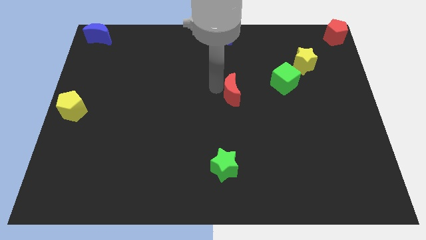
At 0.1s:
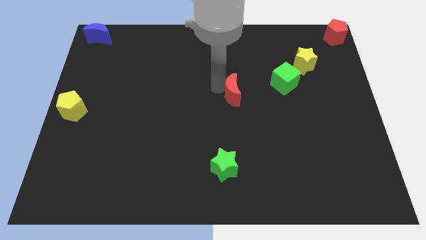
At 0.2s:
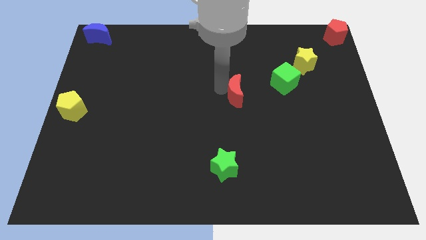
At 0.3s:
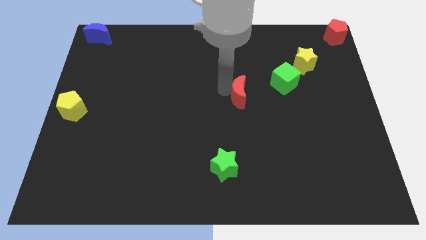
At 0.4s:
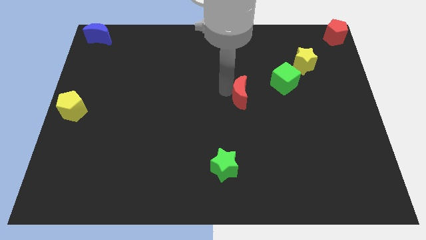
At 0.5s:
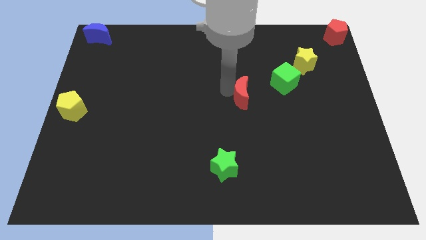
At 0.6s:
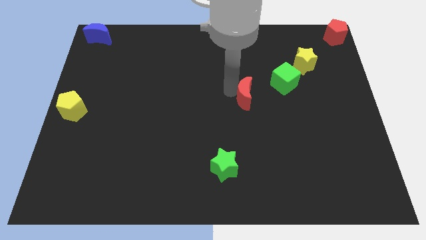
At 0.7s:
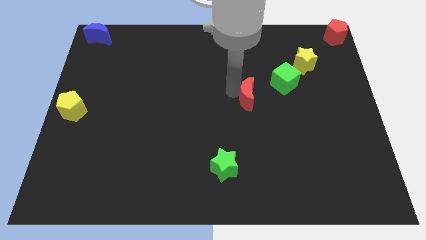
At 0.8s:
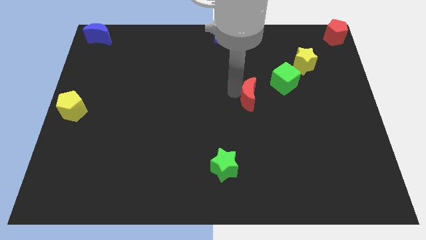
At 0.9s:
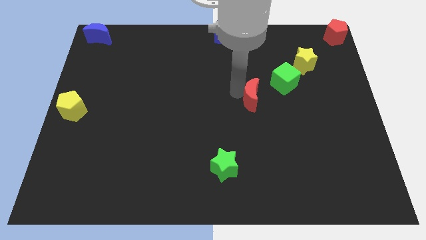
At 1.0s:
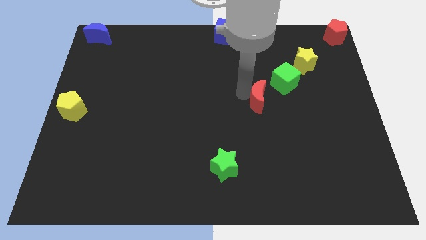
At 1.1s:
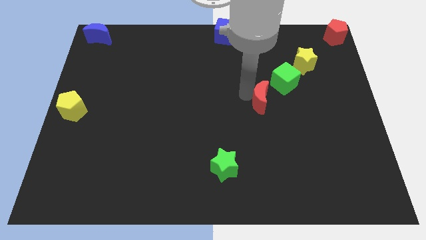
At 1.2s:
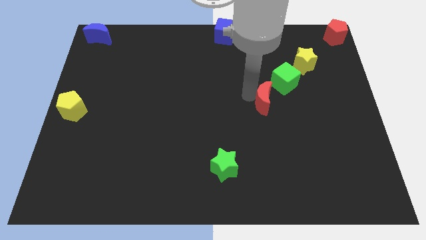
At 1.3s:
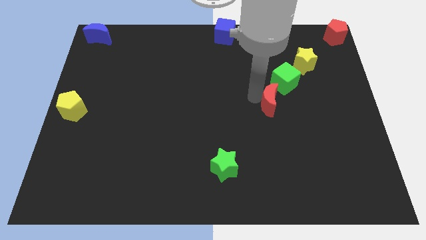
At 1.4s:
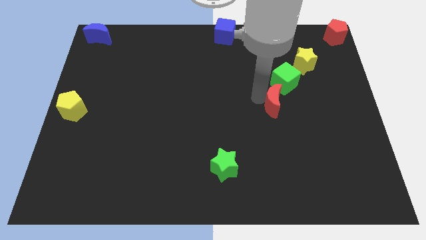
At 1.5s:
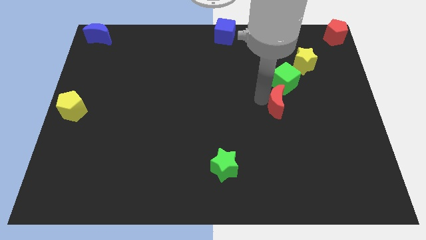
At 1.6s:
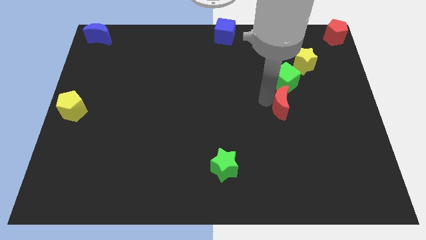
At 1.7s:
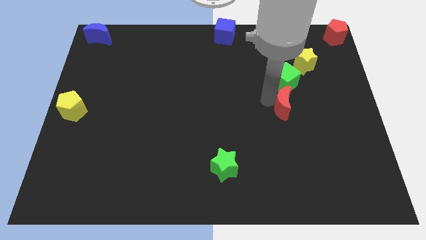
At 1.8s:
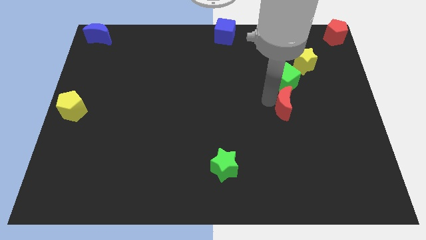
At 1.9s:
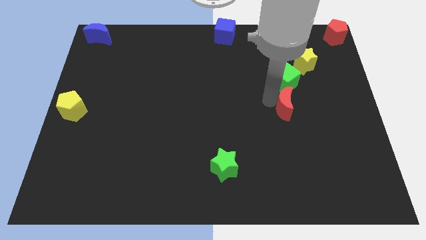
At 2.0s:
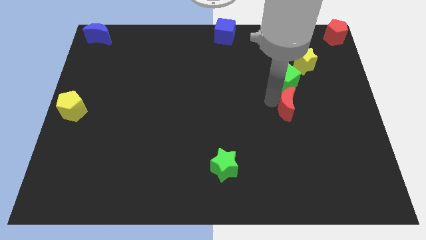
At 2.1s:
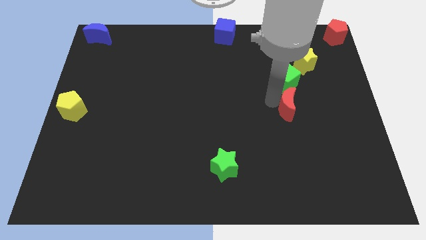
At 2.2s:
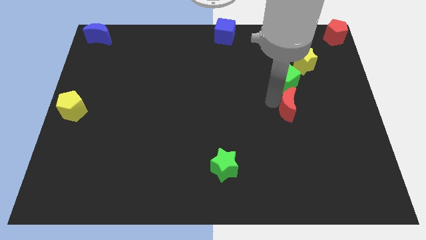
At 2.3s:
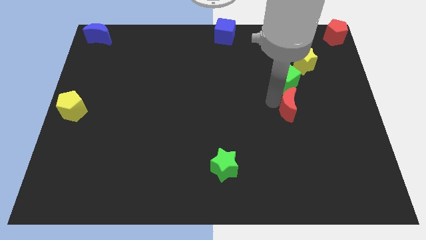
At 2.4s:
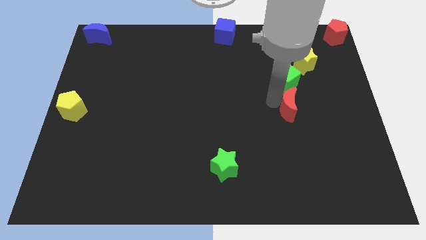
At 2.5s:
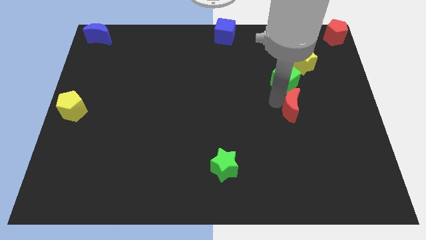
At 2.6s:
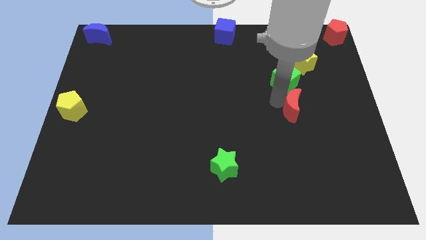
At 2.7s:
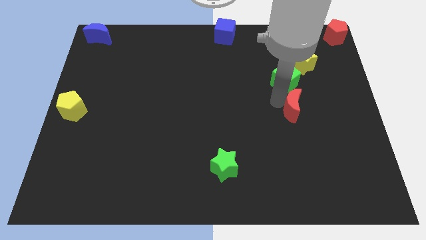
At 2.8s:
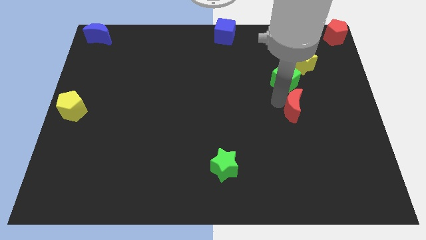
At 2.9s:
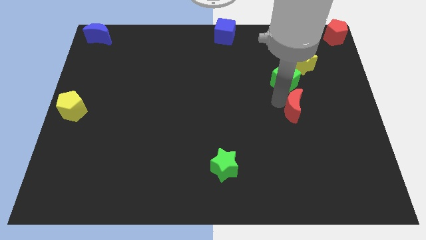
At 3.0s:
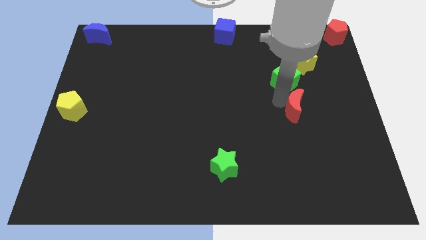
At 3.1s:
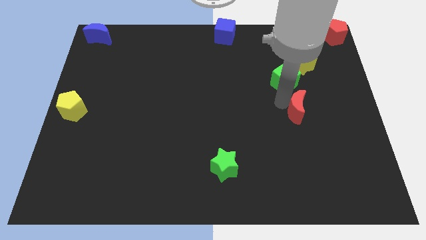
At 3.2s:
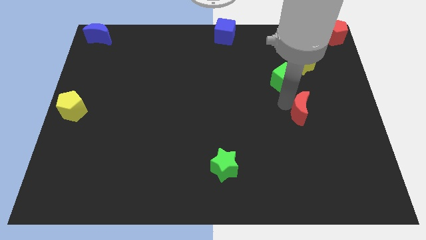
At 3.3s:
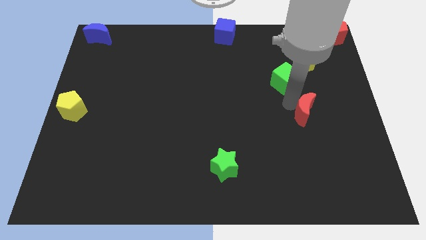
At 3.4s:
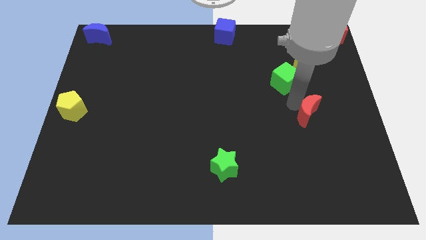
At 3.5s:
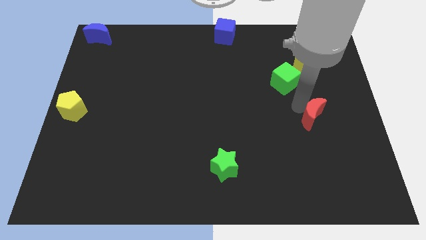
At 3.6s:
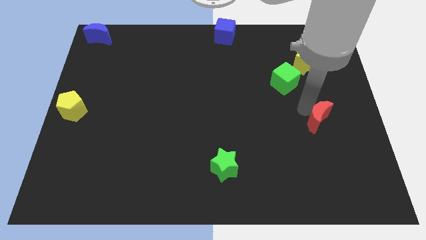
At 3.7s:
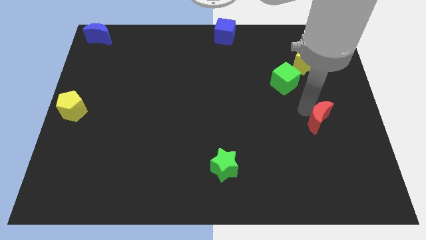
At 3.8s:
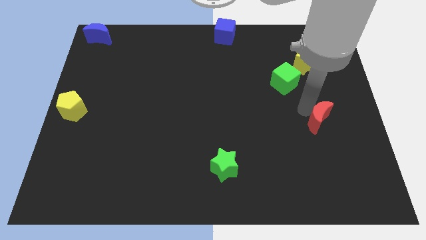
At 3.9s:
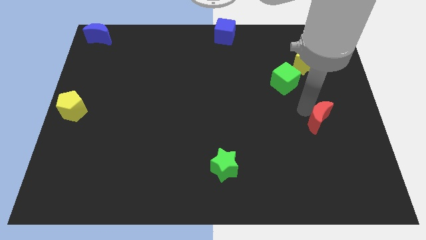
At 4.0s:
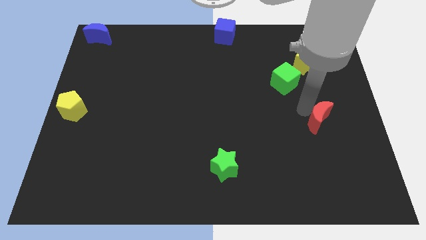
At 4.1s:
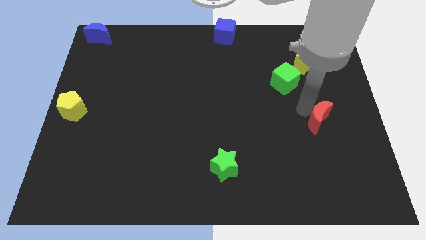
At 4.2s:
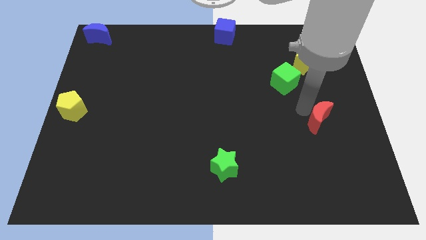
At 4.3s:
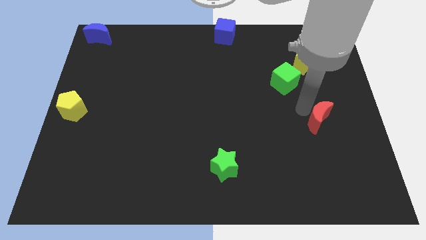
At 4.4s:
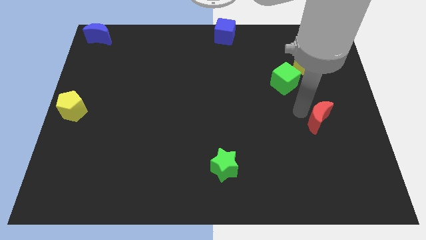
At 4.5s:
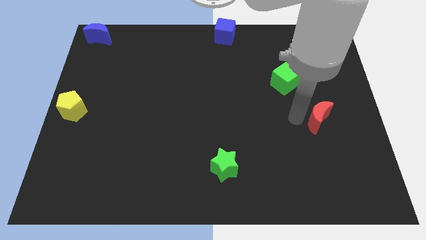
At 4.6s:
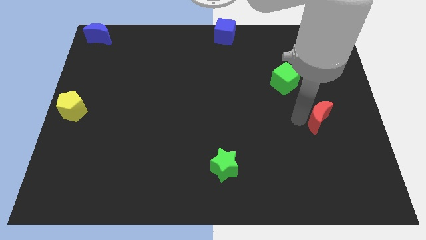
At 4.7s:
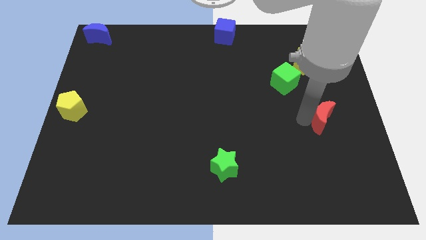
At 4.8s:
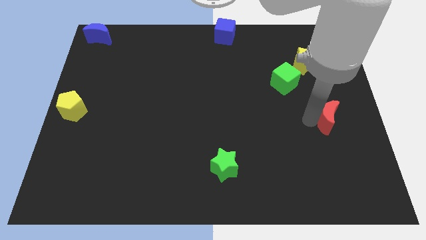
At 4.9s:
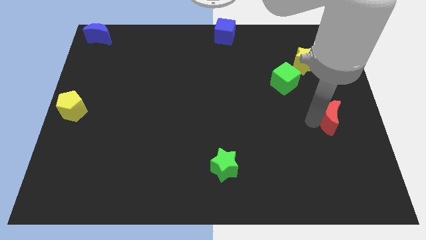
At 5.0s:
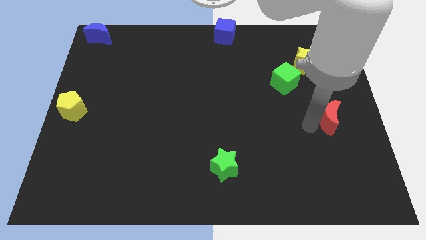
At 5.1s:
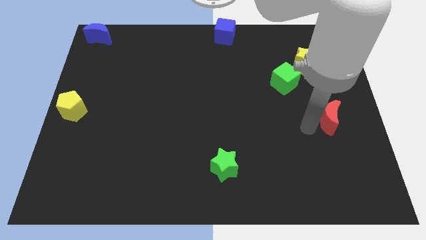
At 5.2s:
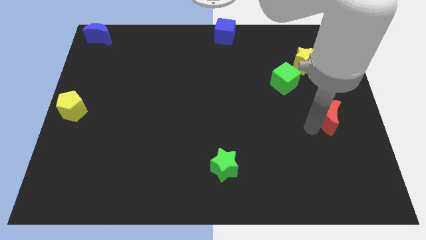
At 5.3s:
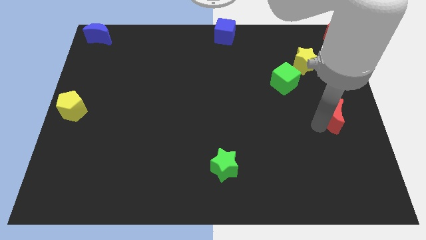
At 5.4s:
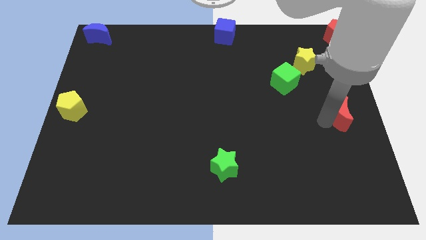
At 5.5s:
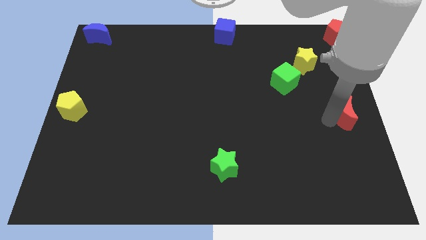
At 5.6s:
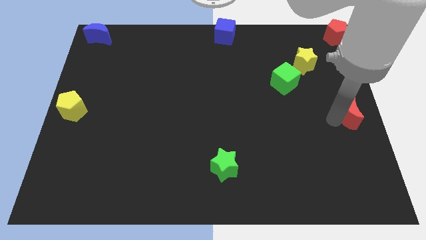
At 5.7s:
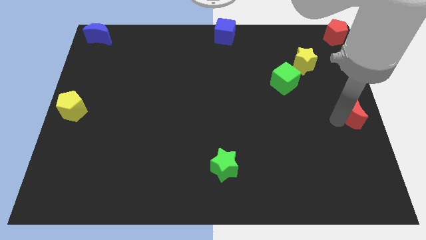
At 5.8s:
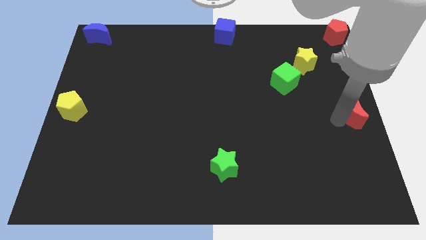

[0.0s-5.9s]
place the red moon below the yellow star

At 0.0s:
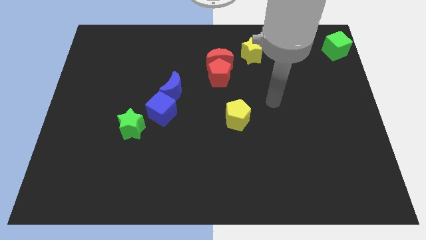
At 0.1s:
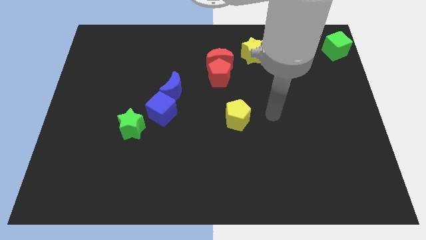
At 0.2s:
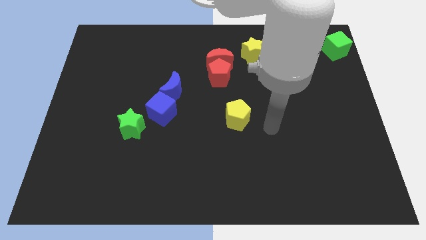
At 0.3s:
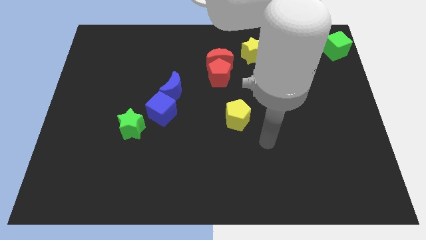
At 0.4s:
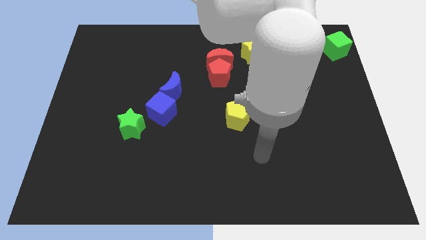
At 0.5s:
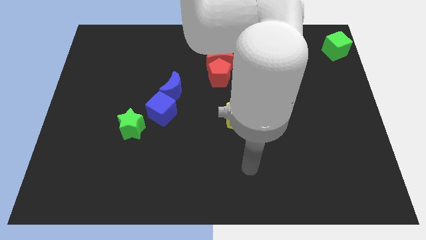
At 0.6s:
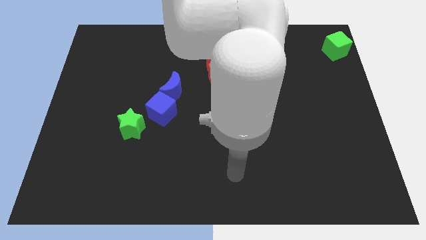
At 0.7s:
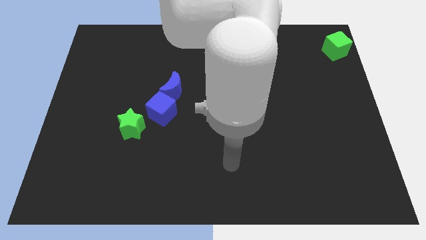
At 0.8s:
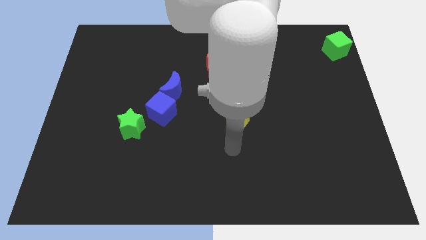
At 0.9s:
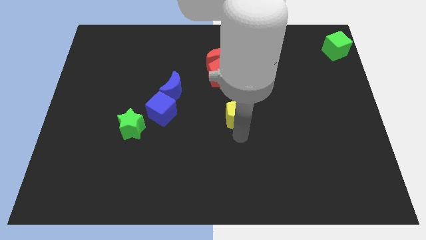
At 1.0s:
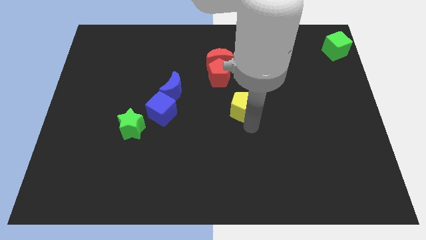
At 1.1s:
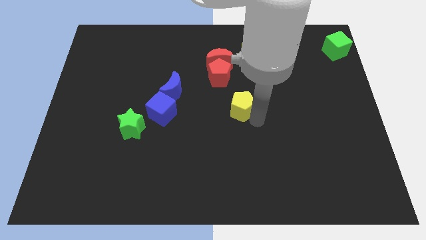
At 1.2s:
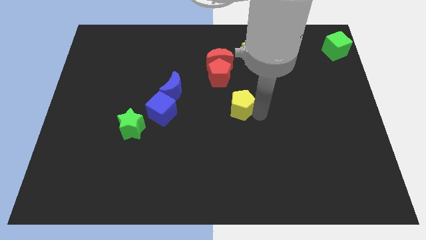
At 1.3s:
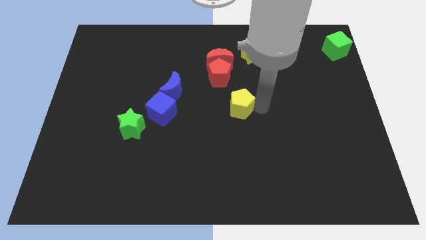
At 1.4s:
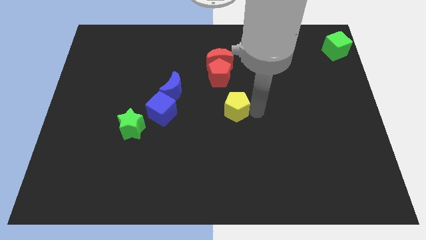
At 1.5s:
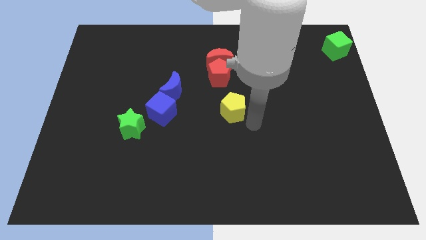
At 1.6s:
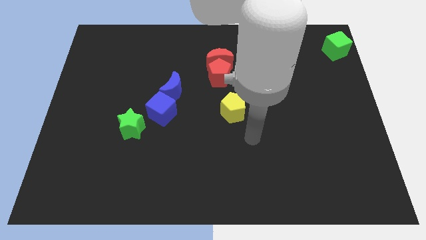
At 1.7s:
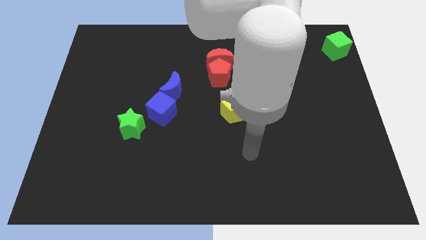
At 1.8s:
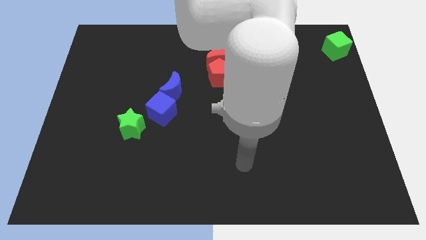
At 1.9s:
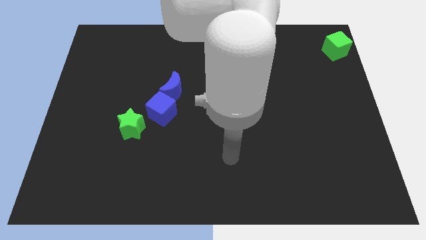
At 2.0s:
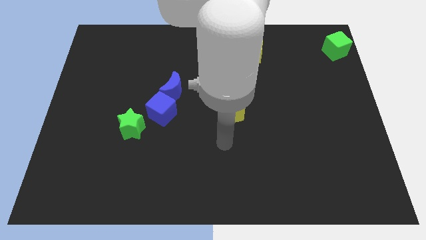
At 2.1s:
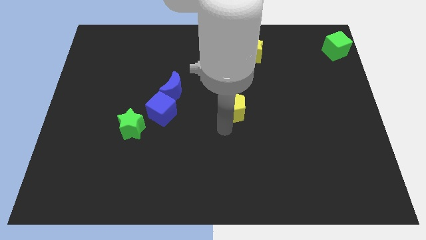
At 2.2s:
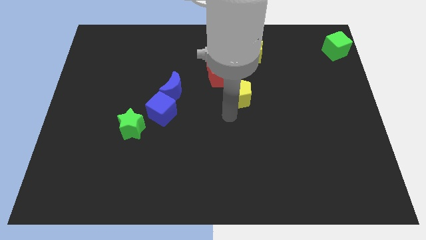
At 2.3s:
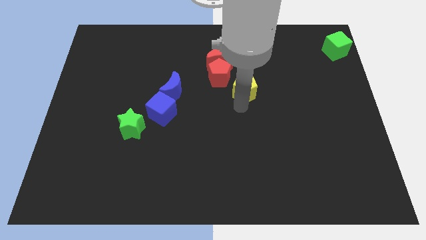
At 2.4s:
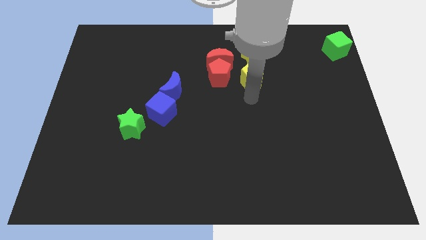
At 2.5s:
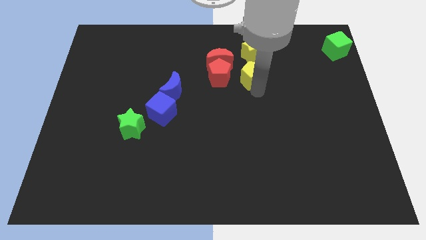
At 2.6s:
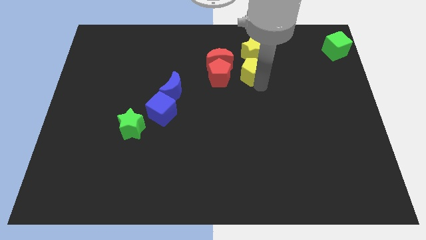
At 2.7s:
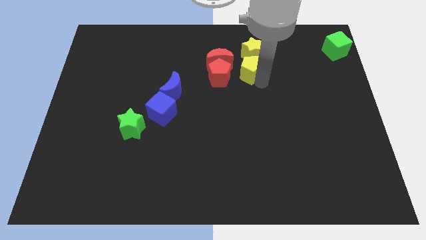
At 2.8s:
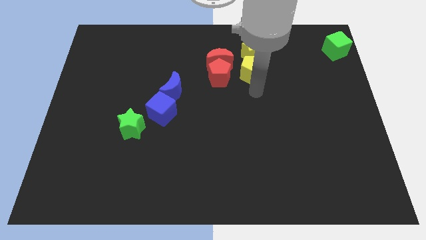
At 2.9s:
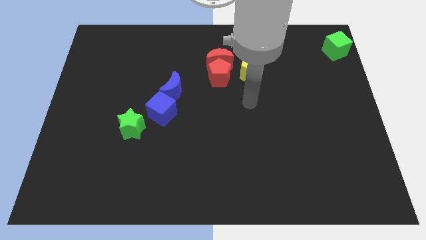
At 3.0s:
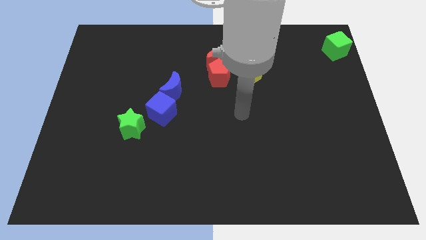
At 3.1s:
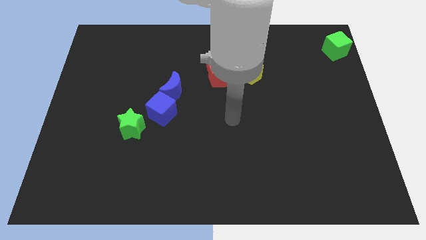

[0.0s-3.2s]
put the yellow pentagon vertically below the yellow star
